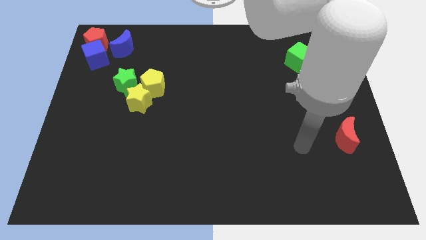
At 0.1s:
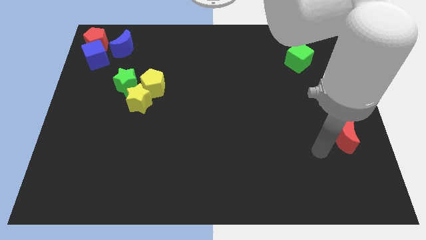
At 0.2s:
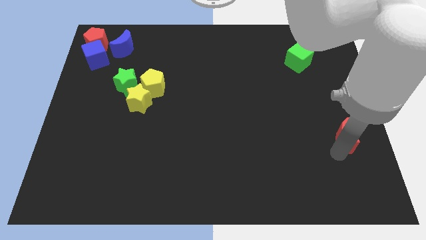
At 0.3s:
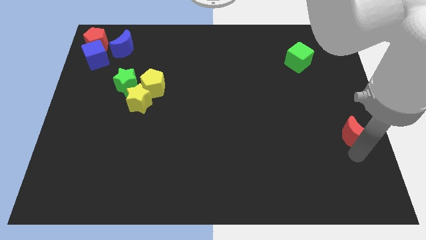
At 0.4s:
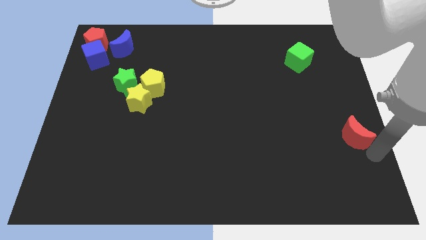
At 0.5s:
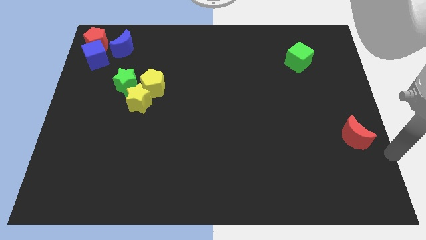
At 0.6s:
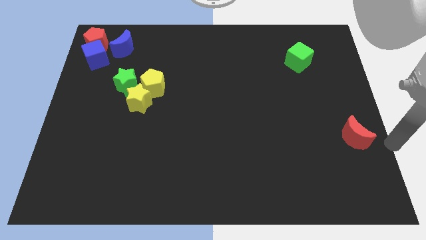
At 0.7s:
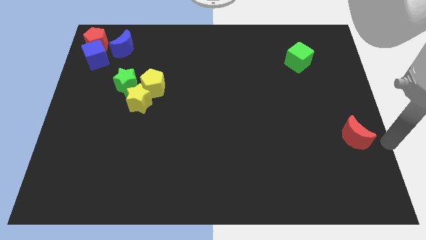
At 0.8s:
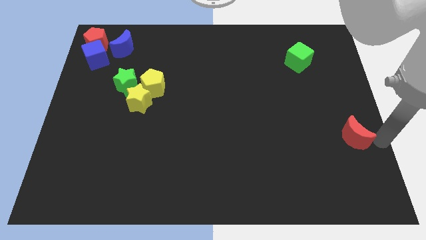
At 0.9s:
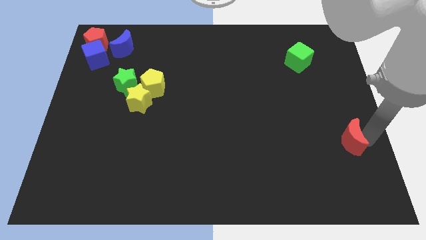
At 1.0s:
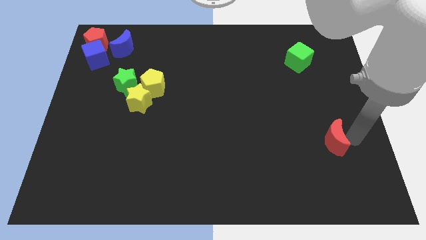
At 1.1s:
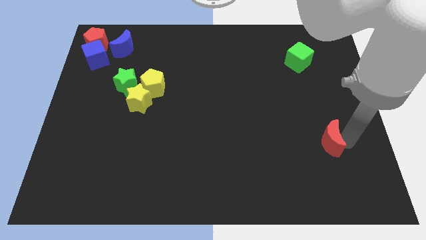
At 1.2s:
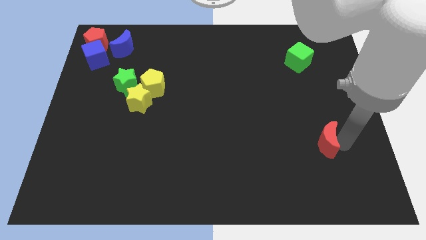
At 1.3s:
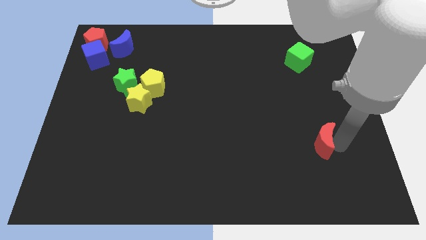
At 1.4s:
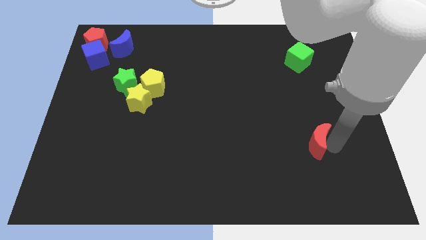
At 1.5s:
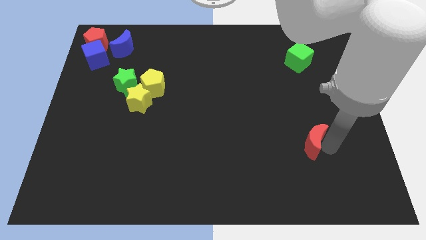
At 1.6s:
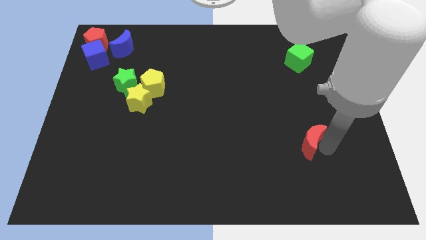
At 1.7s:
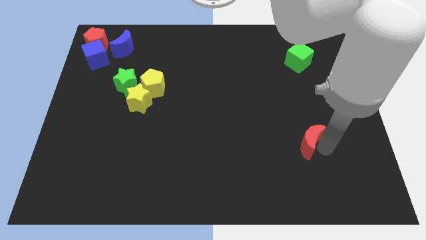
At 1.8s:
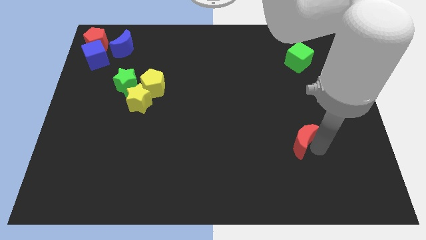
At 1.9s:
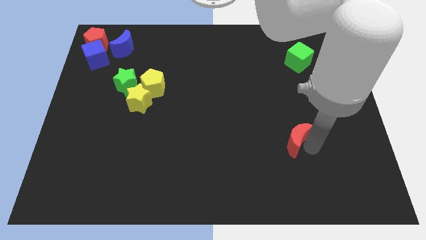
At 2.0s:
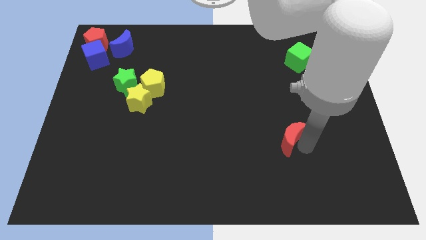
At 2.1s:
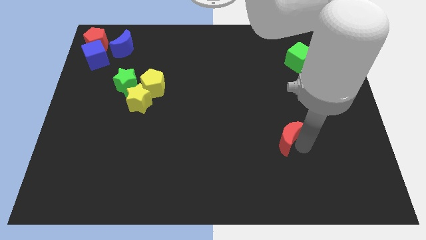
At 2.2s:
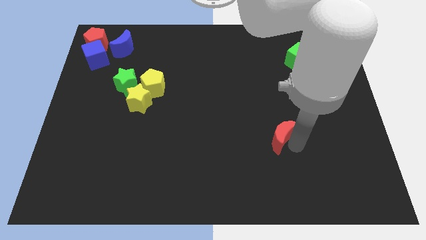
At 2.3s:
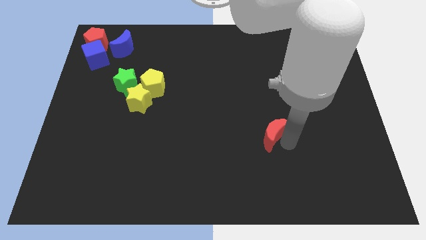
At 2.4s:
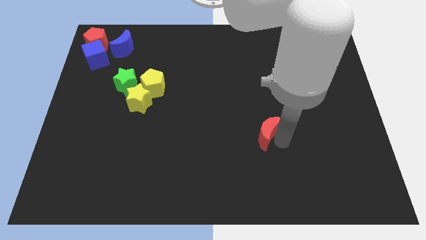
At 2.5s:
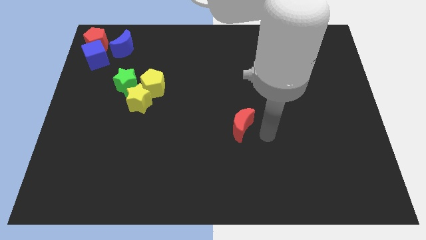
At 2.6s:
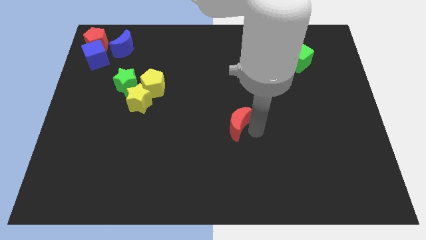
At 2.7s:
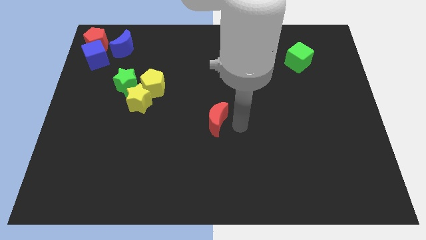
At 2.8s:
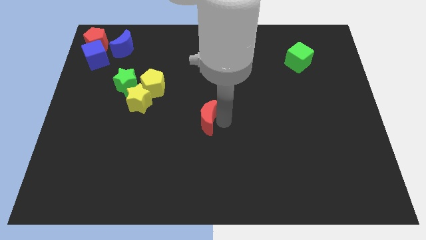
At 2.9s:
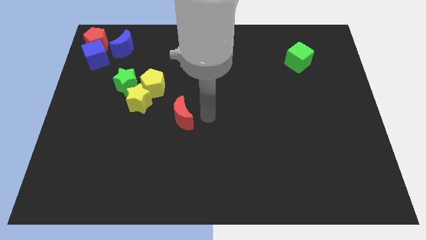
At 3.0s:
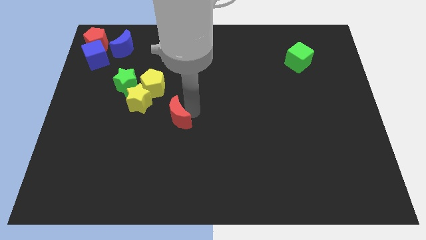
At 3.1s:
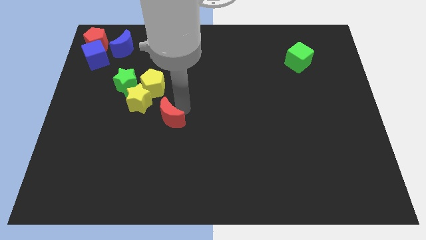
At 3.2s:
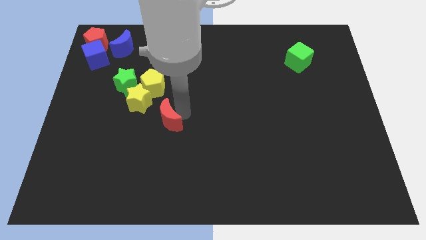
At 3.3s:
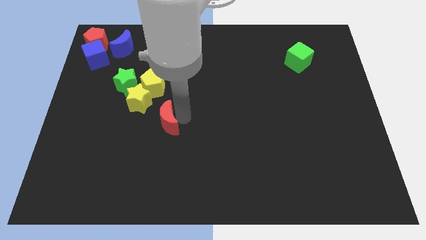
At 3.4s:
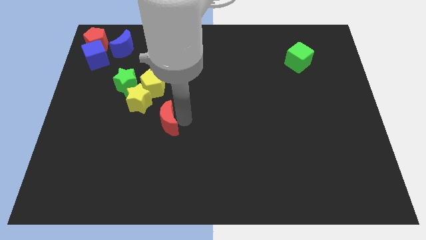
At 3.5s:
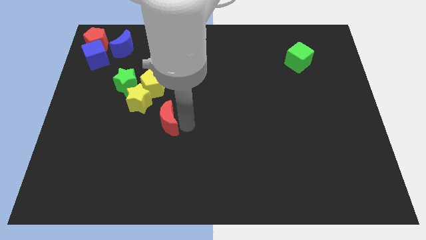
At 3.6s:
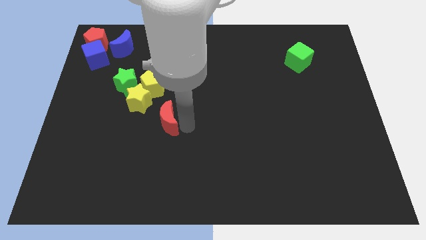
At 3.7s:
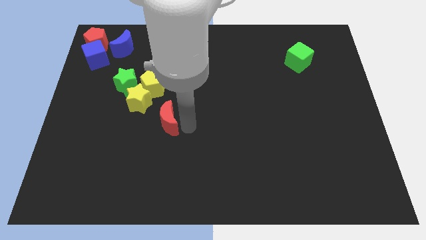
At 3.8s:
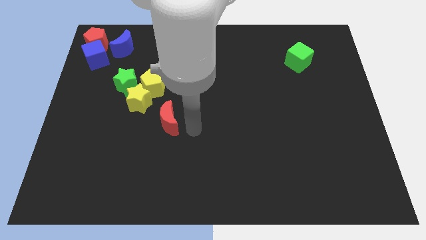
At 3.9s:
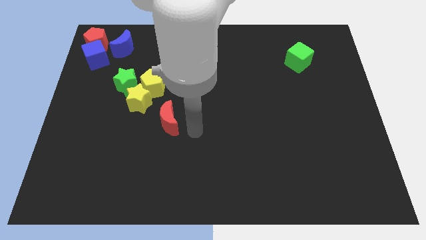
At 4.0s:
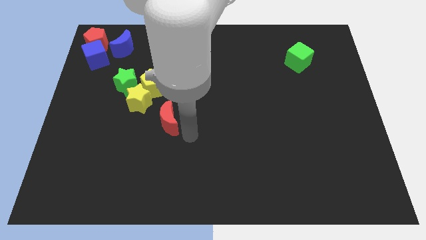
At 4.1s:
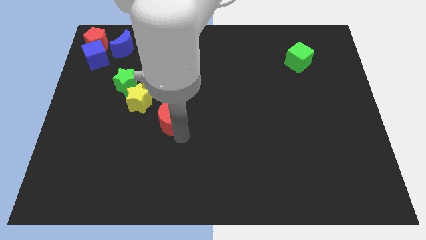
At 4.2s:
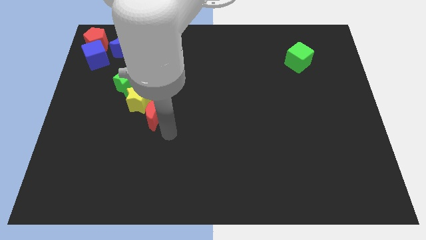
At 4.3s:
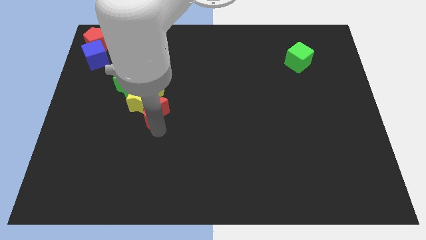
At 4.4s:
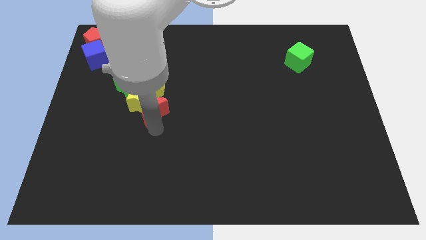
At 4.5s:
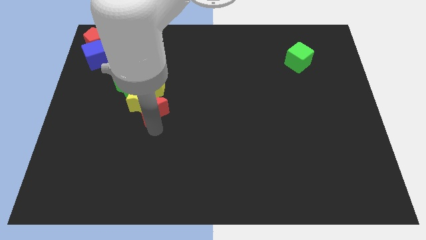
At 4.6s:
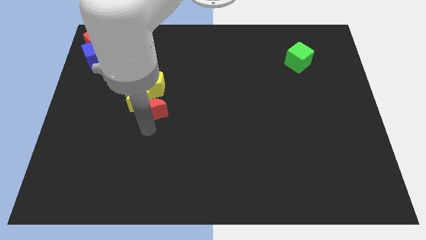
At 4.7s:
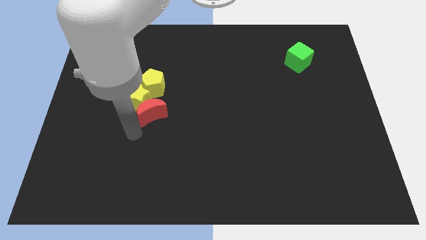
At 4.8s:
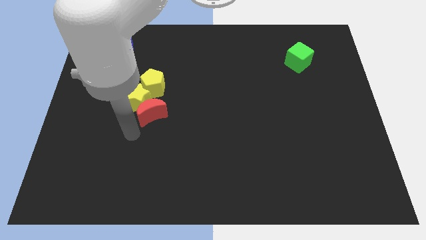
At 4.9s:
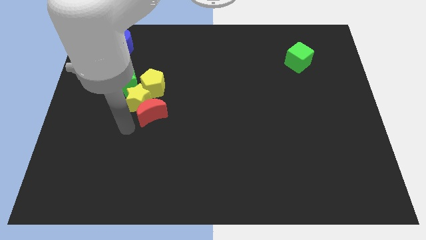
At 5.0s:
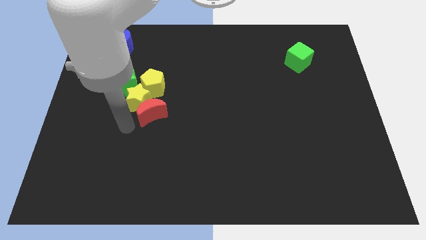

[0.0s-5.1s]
move the red moon to the bottom right of yellow star

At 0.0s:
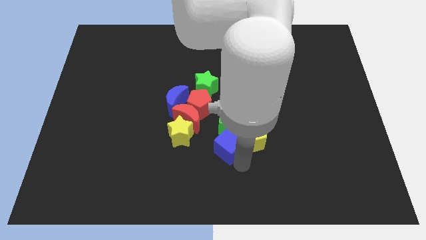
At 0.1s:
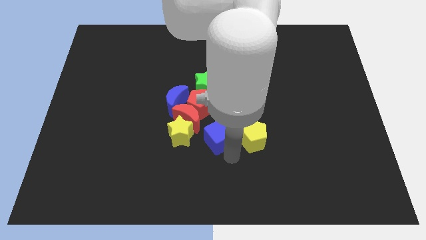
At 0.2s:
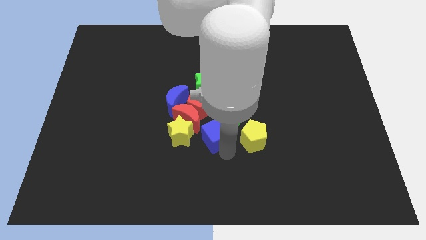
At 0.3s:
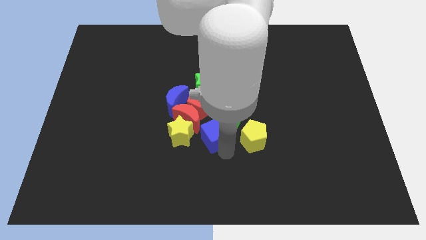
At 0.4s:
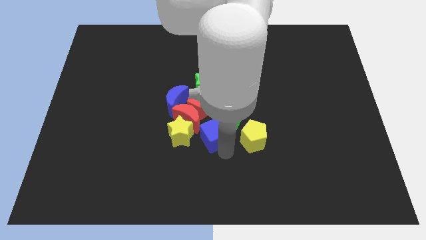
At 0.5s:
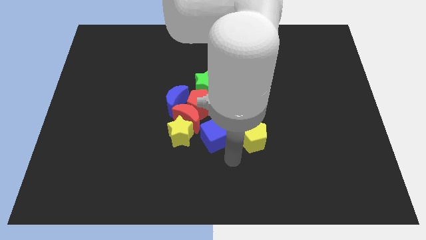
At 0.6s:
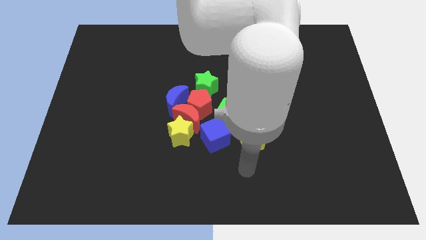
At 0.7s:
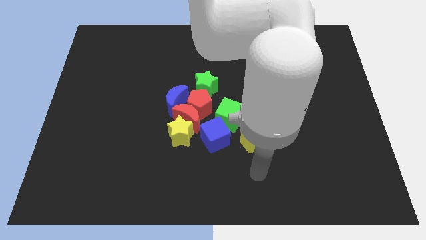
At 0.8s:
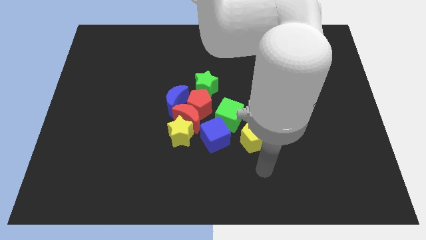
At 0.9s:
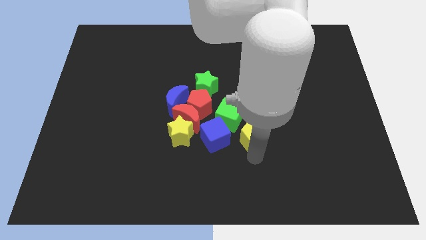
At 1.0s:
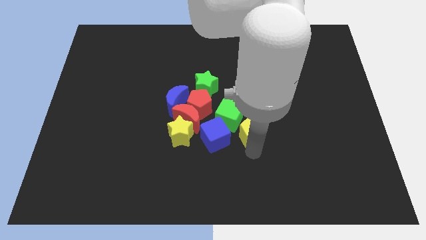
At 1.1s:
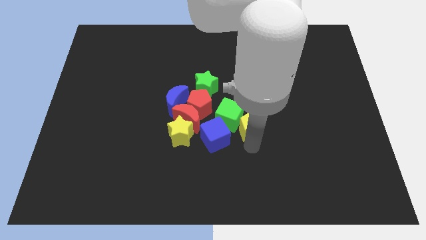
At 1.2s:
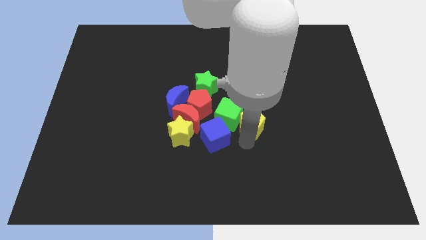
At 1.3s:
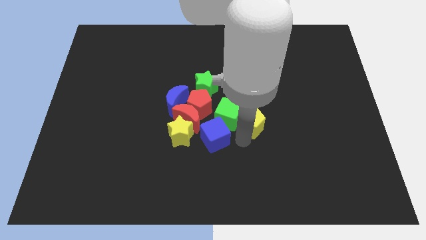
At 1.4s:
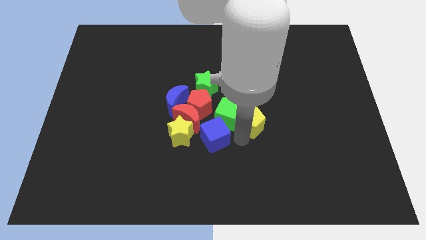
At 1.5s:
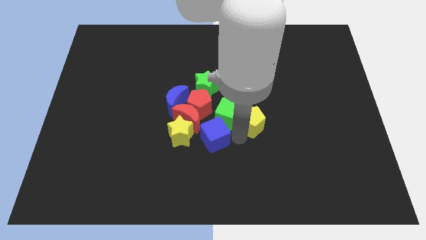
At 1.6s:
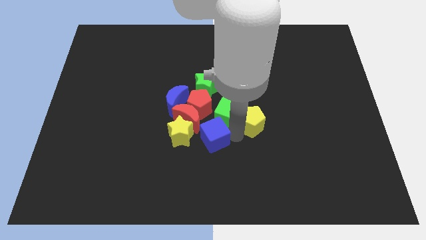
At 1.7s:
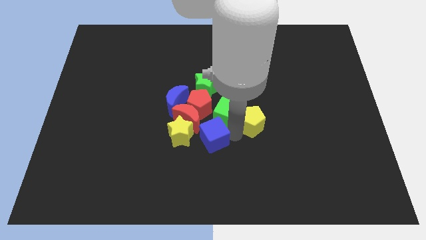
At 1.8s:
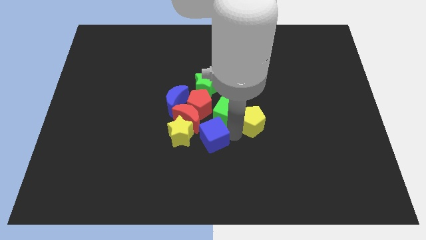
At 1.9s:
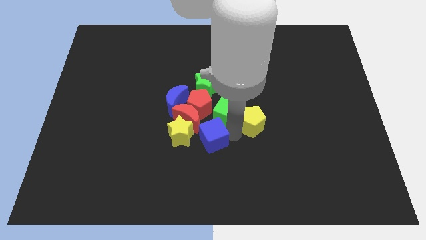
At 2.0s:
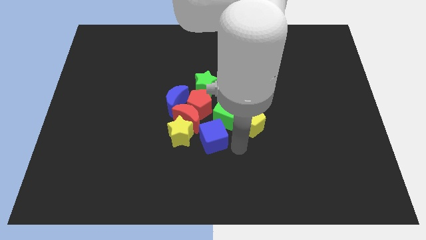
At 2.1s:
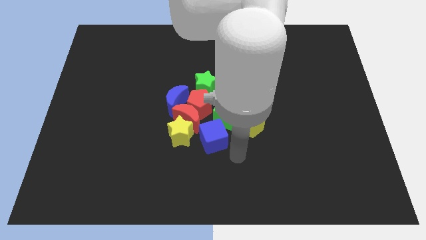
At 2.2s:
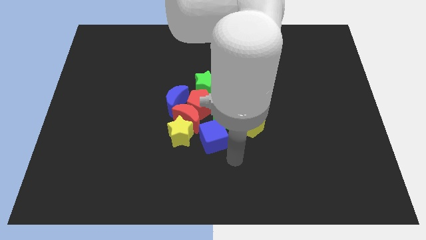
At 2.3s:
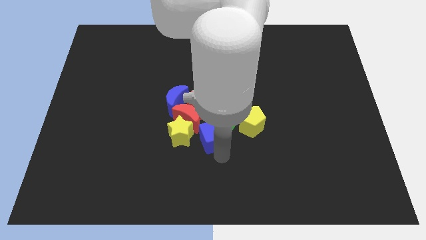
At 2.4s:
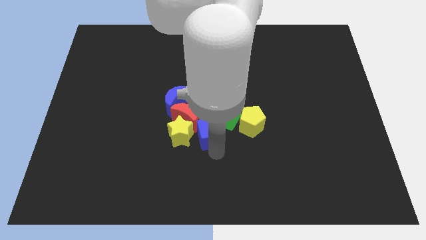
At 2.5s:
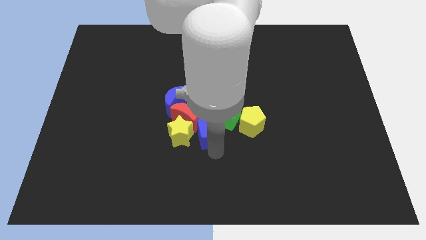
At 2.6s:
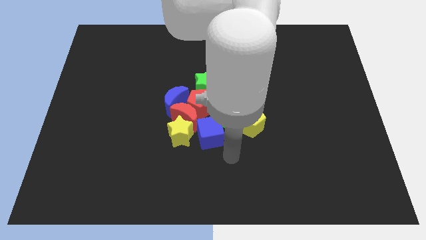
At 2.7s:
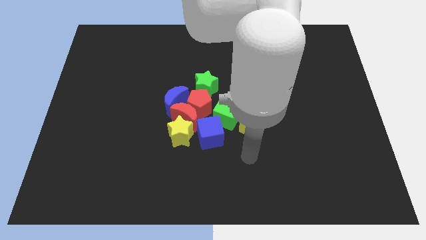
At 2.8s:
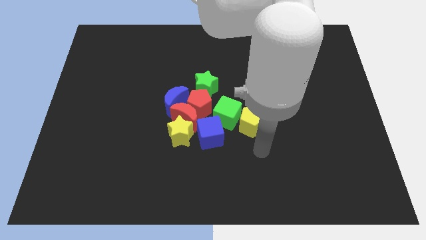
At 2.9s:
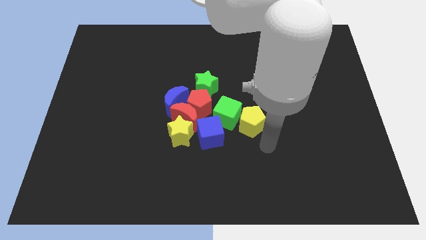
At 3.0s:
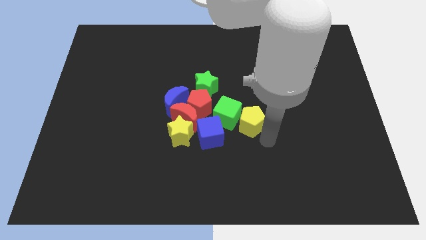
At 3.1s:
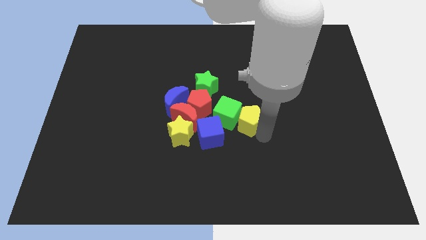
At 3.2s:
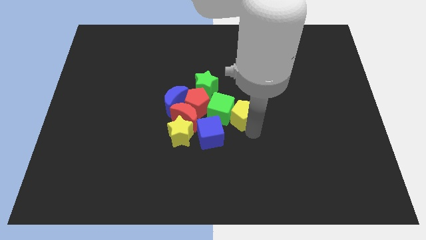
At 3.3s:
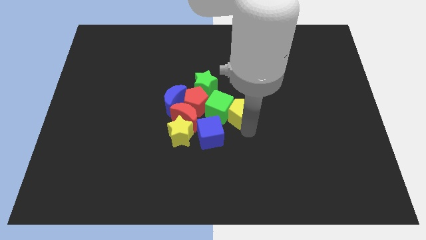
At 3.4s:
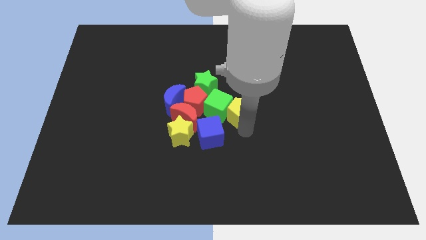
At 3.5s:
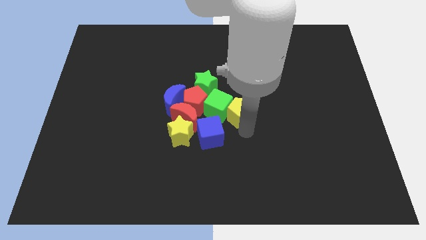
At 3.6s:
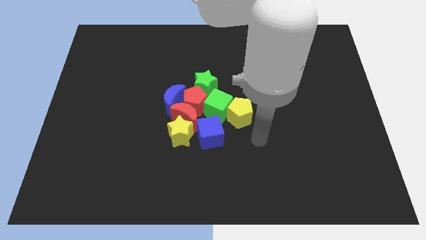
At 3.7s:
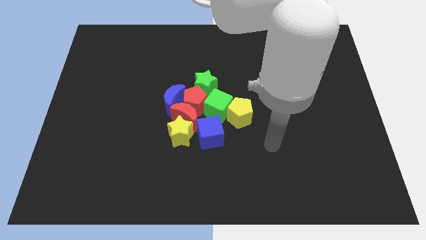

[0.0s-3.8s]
push the blue cube green cube and yellow pentagon in the group of block

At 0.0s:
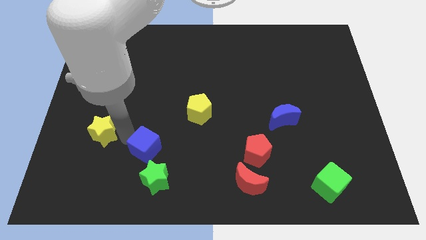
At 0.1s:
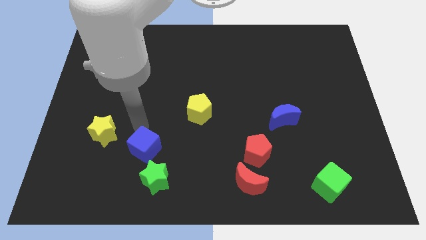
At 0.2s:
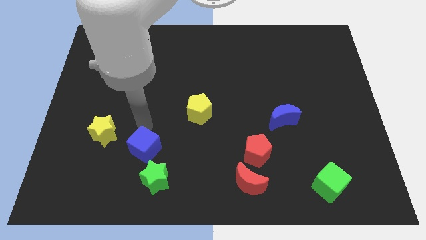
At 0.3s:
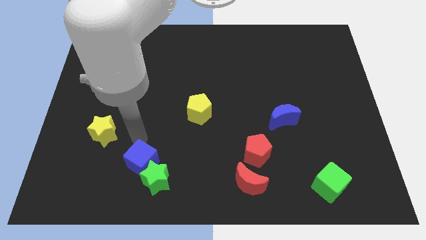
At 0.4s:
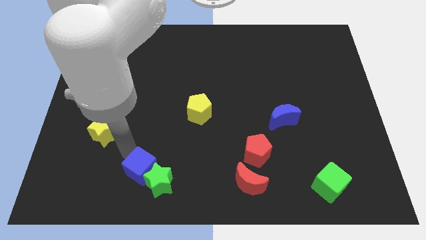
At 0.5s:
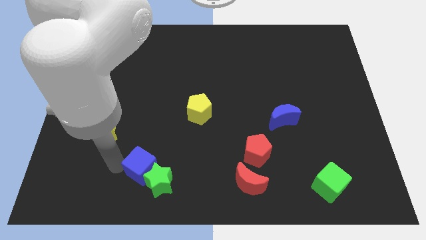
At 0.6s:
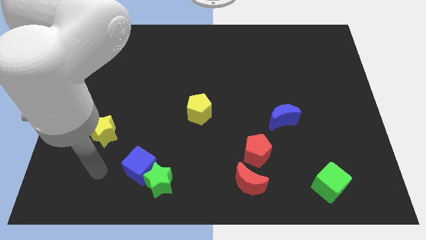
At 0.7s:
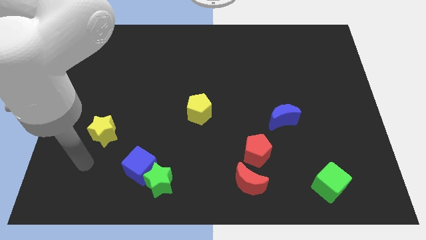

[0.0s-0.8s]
move blue cube into green star
